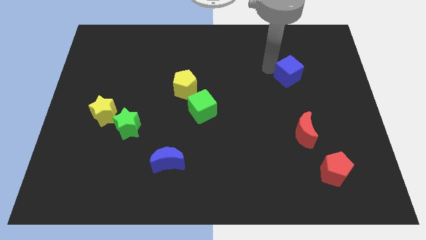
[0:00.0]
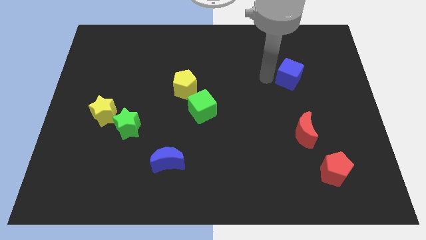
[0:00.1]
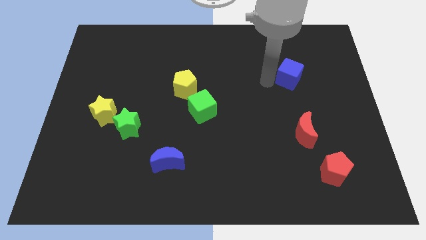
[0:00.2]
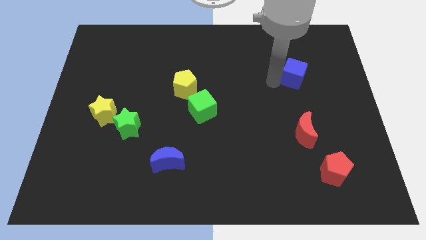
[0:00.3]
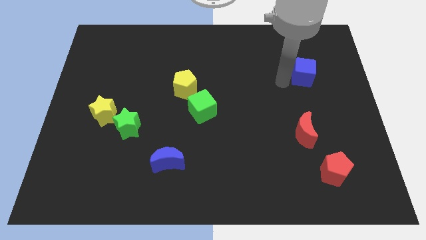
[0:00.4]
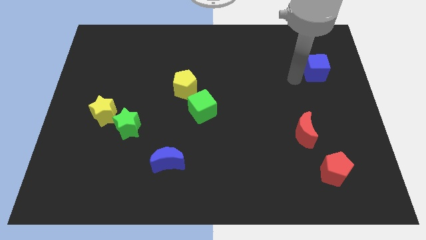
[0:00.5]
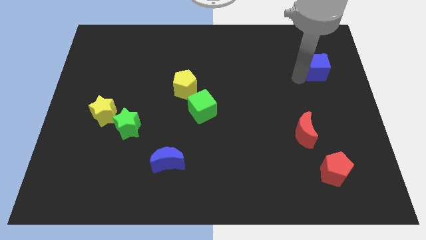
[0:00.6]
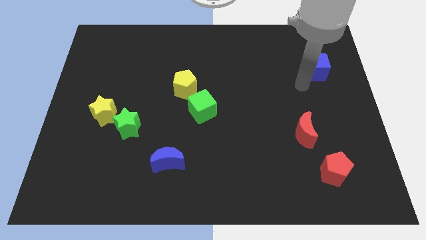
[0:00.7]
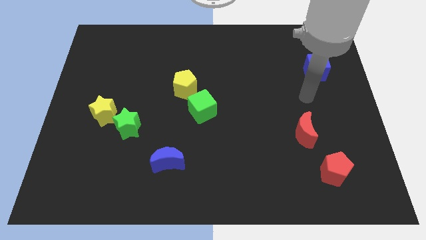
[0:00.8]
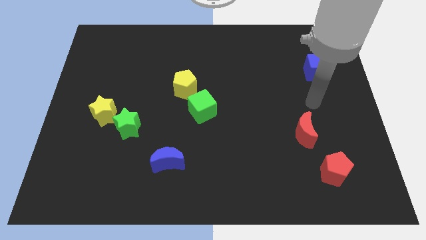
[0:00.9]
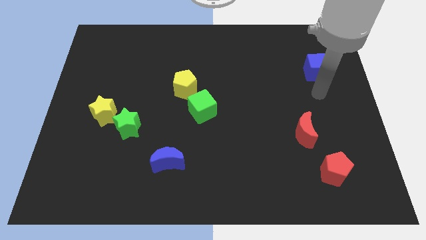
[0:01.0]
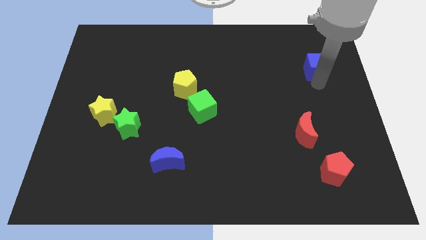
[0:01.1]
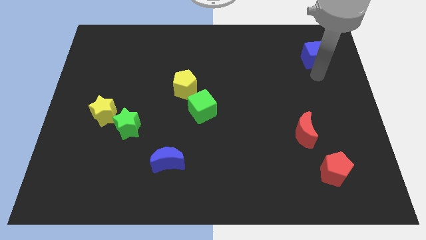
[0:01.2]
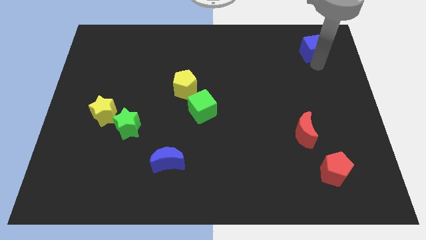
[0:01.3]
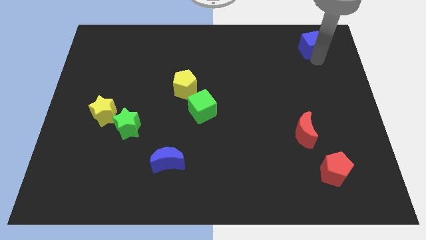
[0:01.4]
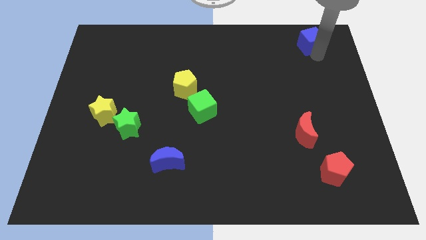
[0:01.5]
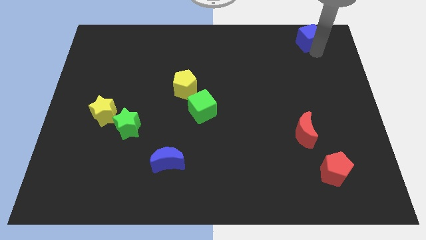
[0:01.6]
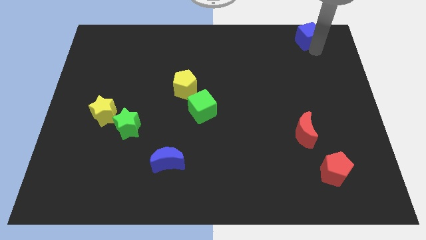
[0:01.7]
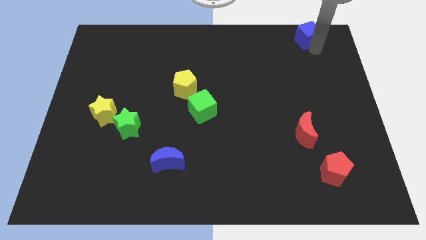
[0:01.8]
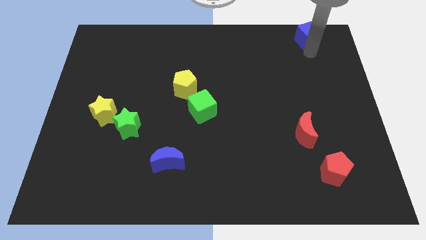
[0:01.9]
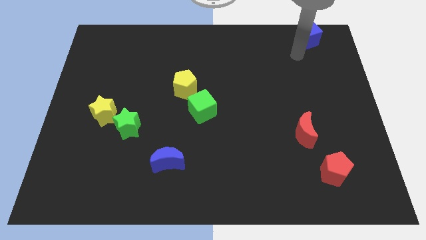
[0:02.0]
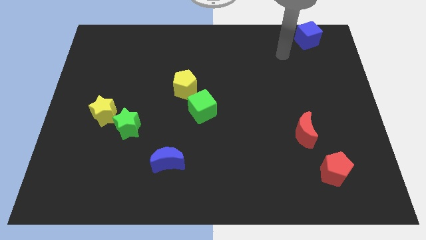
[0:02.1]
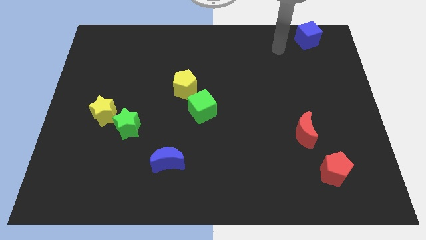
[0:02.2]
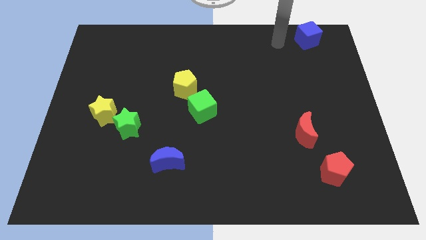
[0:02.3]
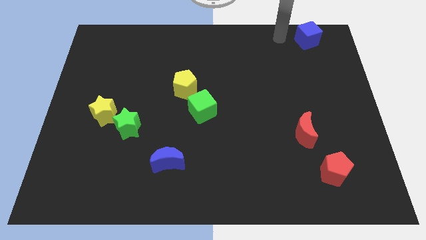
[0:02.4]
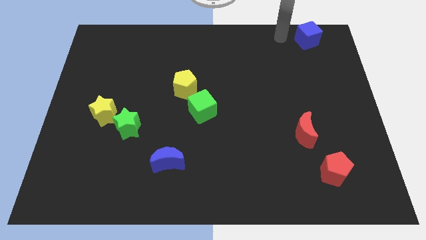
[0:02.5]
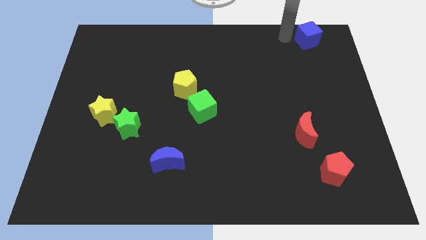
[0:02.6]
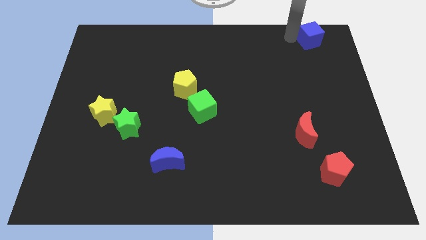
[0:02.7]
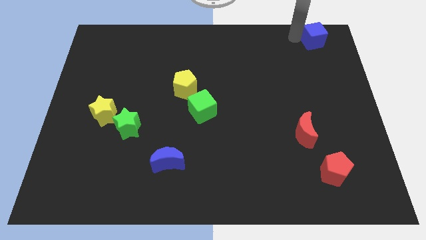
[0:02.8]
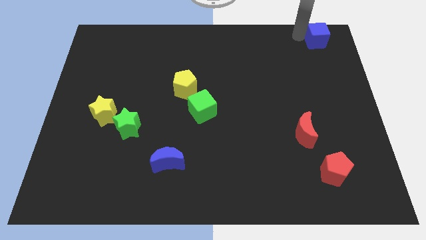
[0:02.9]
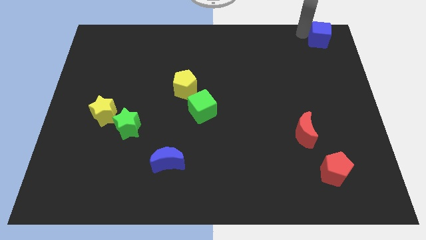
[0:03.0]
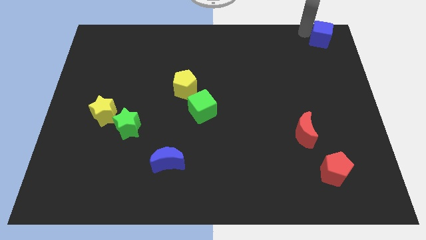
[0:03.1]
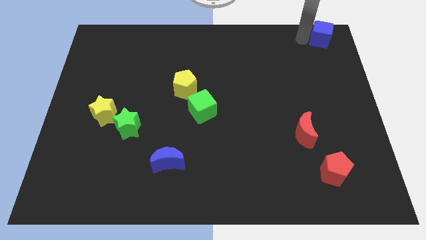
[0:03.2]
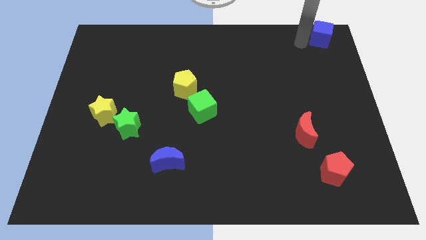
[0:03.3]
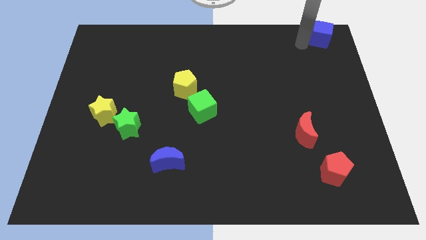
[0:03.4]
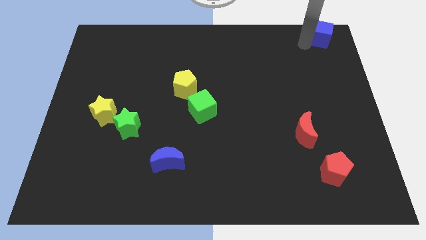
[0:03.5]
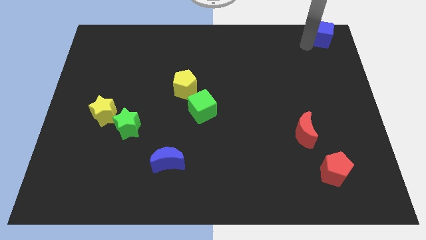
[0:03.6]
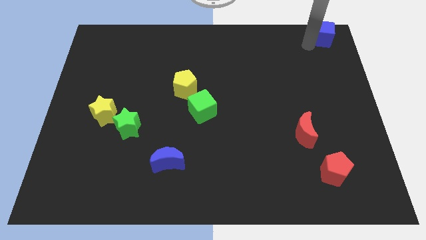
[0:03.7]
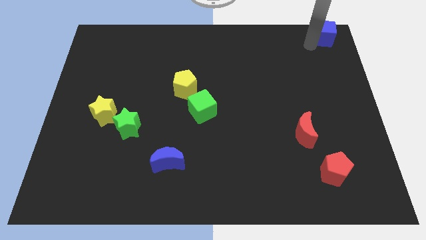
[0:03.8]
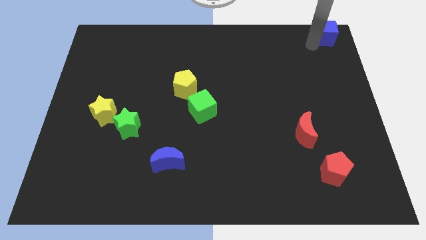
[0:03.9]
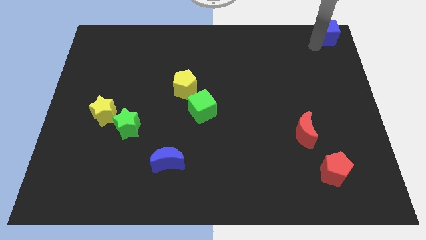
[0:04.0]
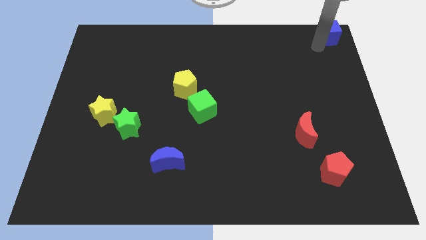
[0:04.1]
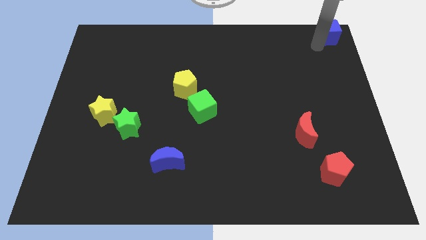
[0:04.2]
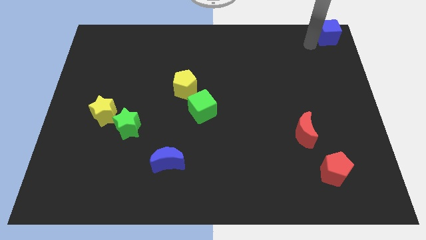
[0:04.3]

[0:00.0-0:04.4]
push the blue cube to the top right corner of the board

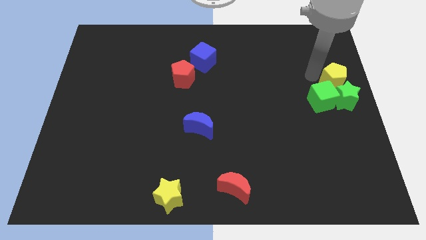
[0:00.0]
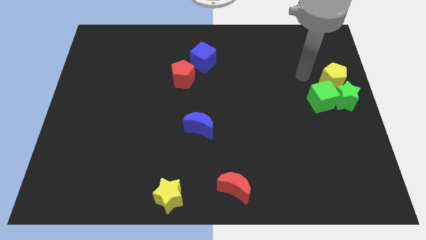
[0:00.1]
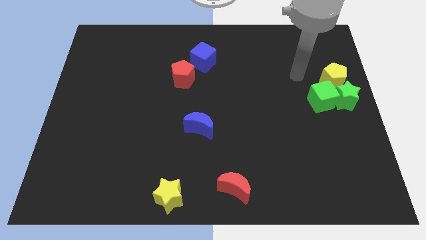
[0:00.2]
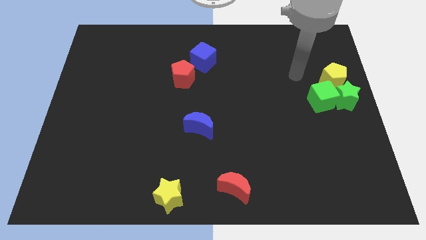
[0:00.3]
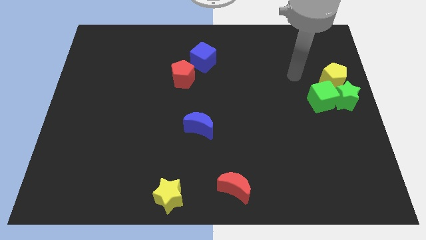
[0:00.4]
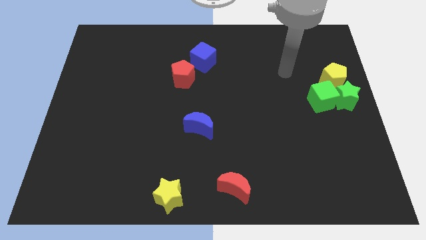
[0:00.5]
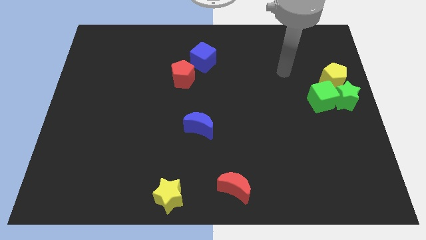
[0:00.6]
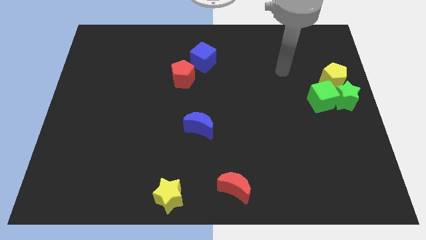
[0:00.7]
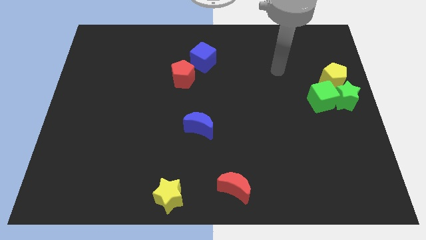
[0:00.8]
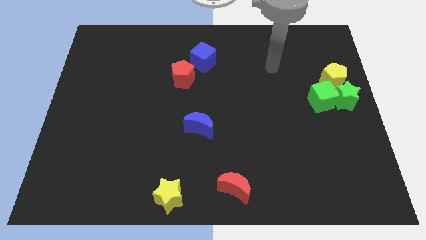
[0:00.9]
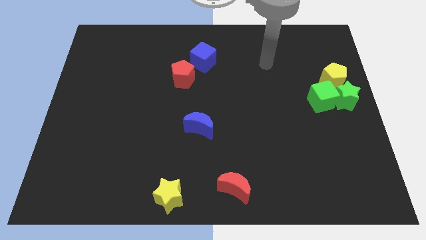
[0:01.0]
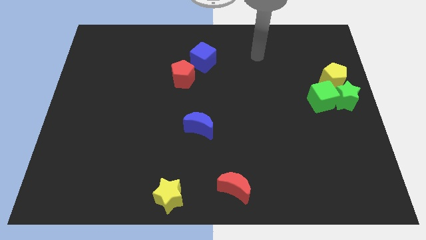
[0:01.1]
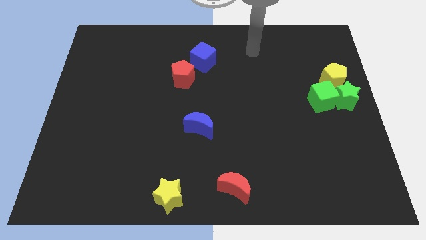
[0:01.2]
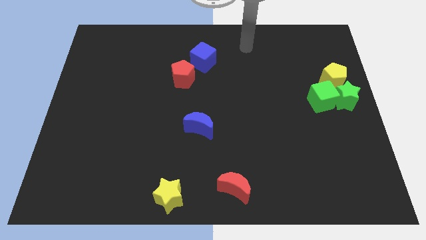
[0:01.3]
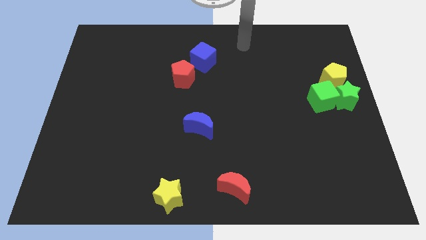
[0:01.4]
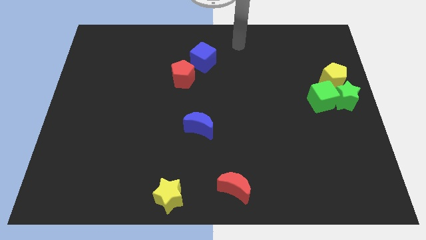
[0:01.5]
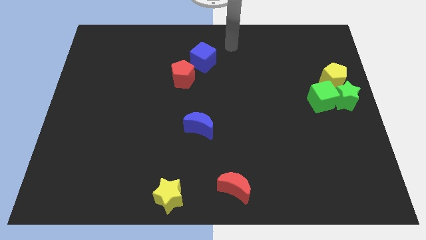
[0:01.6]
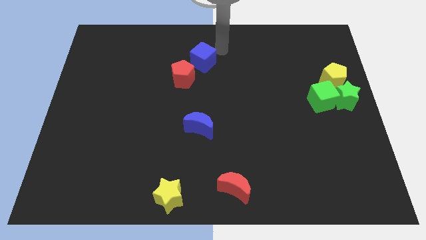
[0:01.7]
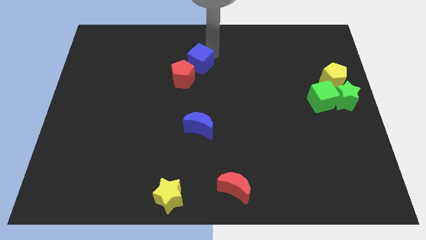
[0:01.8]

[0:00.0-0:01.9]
go away from the yellow pentagon

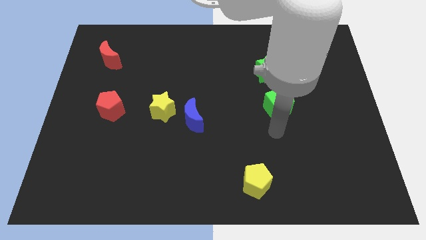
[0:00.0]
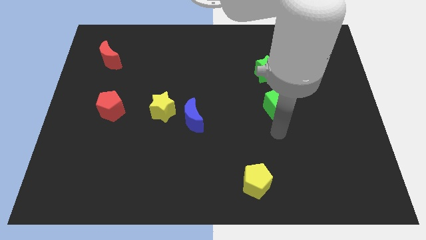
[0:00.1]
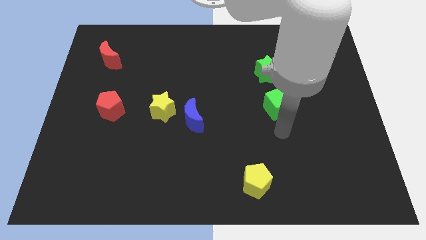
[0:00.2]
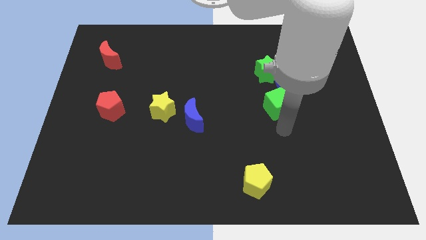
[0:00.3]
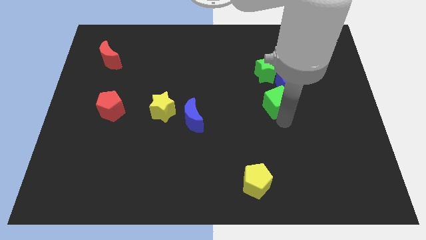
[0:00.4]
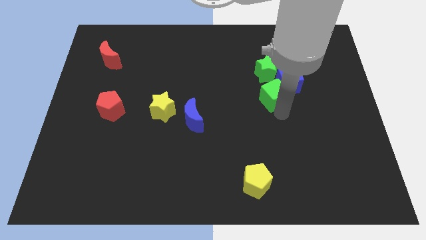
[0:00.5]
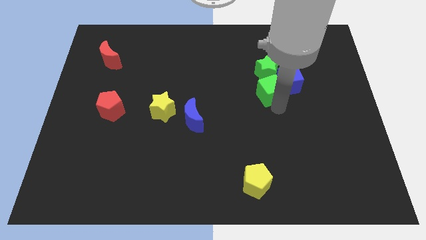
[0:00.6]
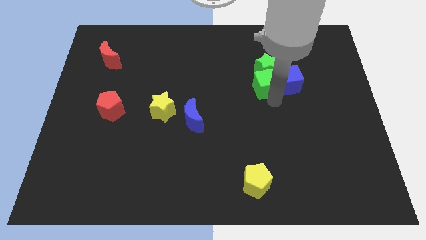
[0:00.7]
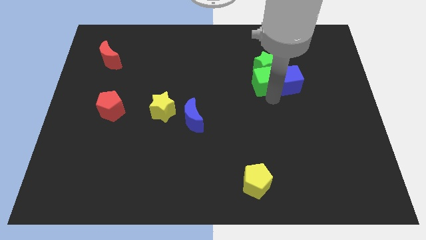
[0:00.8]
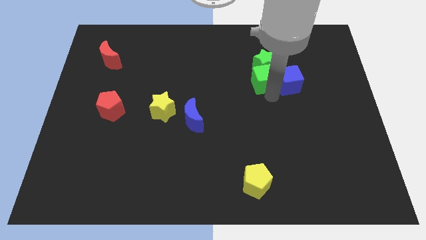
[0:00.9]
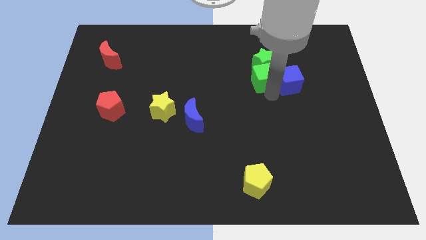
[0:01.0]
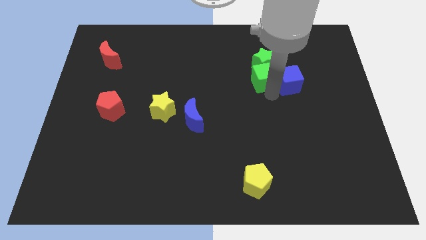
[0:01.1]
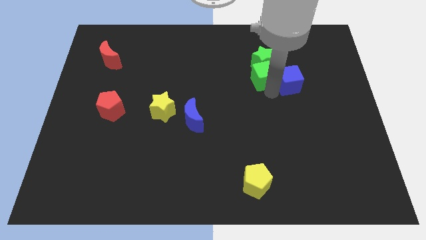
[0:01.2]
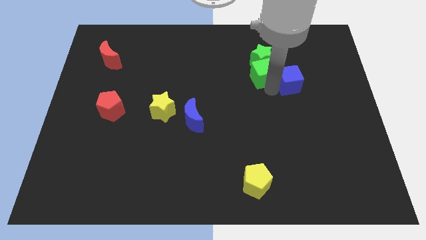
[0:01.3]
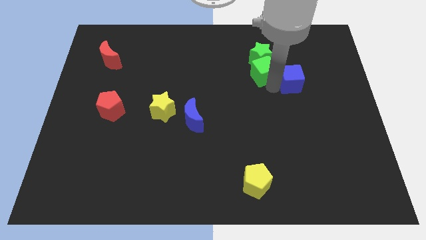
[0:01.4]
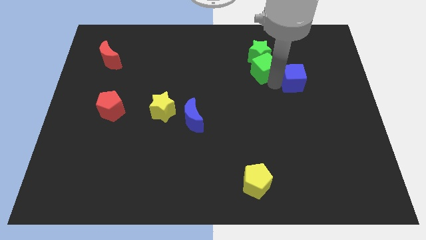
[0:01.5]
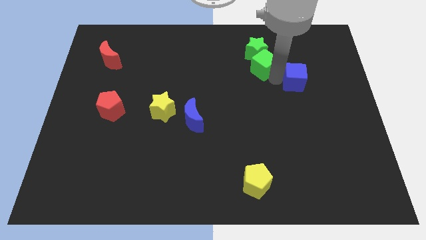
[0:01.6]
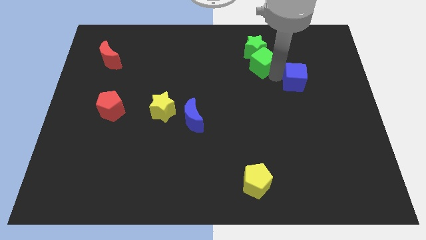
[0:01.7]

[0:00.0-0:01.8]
move green cube to the upward

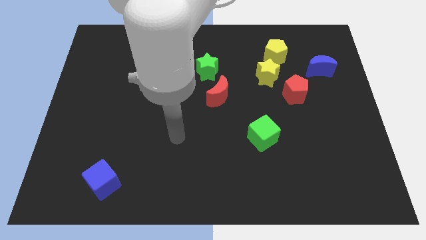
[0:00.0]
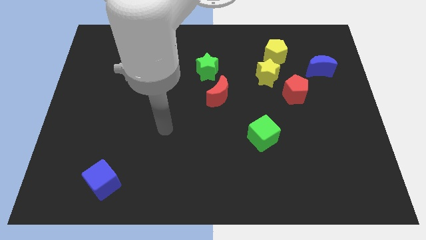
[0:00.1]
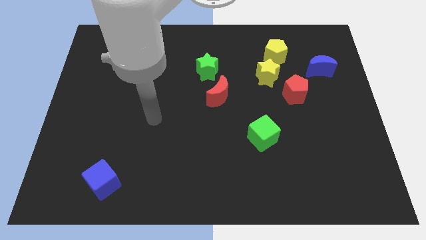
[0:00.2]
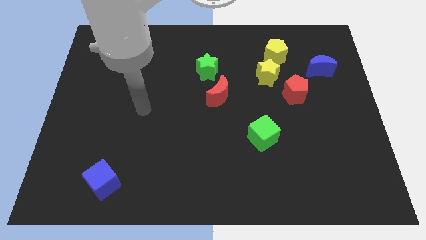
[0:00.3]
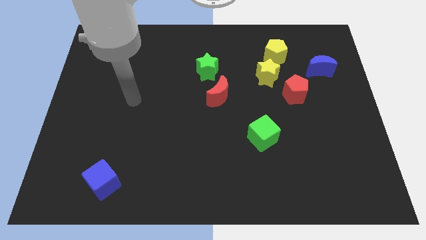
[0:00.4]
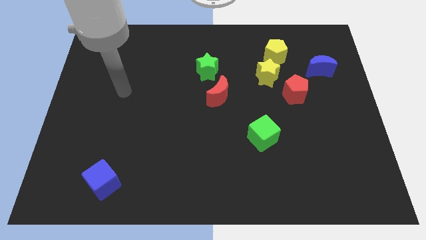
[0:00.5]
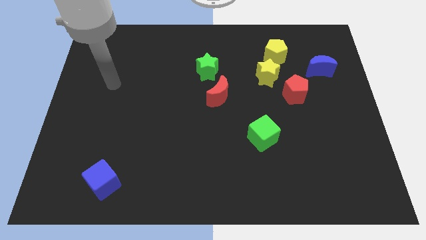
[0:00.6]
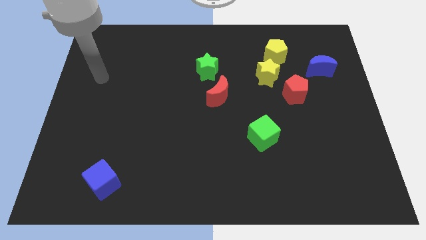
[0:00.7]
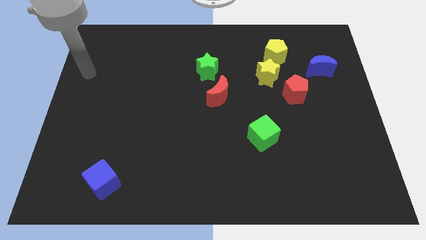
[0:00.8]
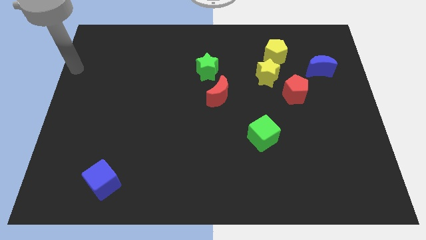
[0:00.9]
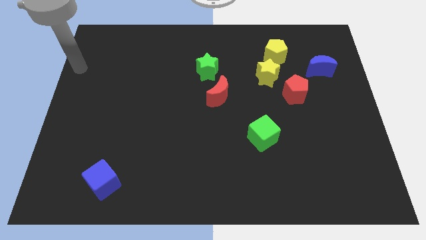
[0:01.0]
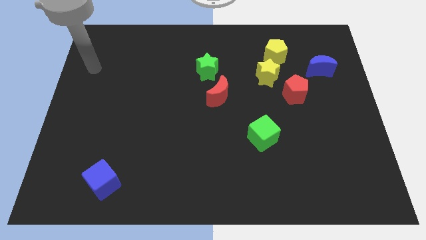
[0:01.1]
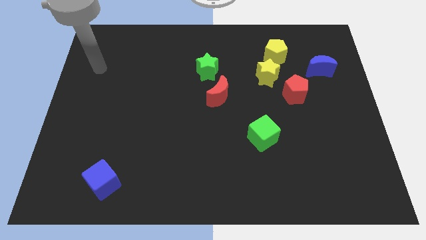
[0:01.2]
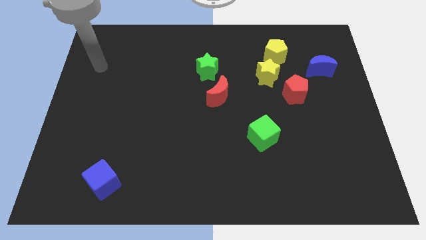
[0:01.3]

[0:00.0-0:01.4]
move your arm towards the top left corner
